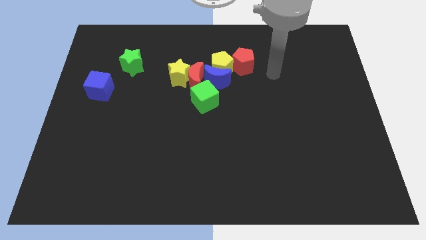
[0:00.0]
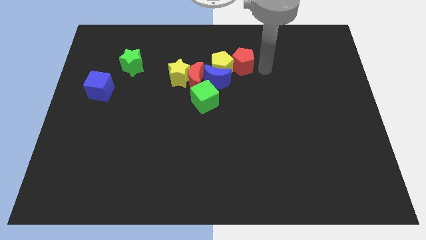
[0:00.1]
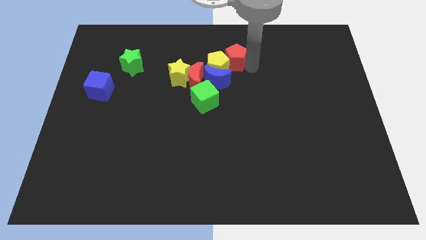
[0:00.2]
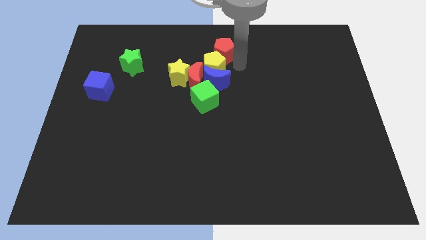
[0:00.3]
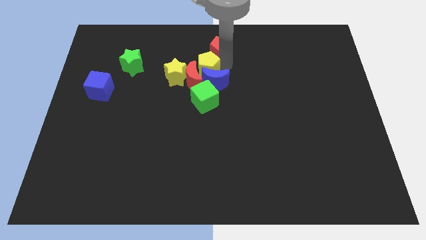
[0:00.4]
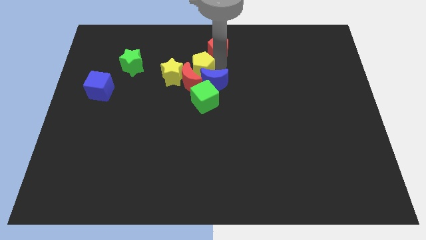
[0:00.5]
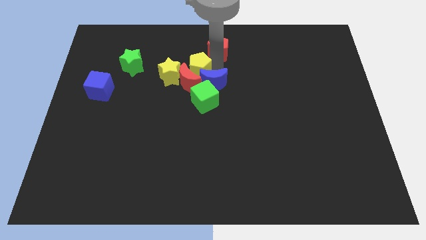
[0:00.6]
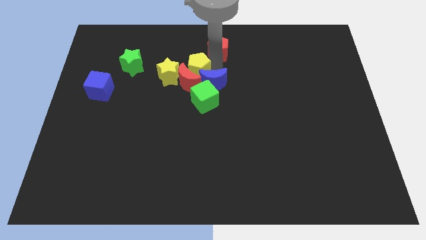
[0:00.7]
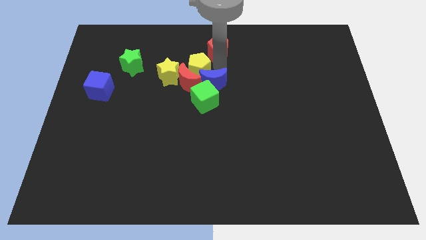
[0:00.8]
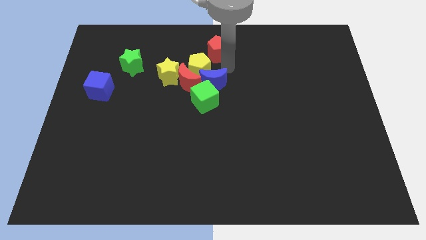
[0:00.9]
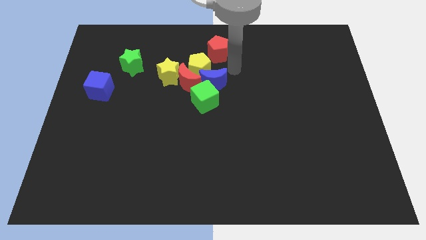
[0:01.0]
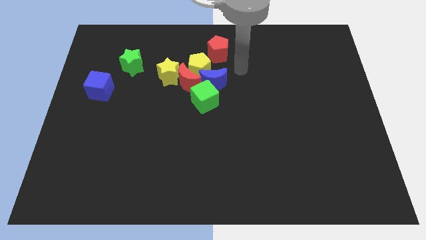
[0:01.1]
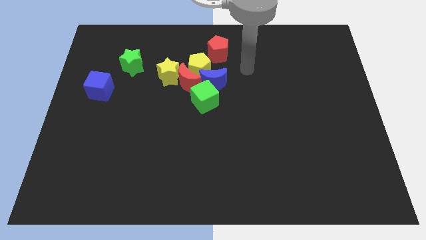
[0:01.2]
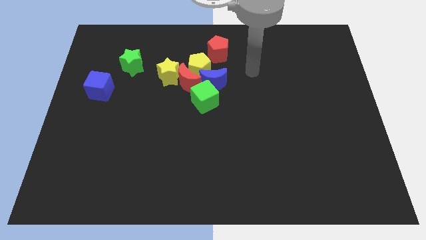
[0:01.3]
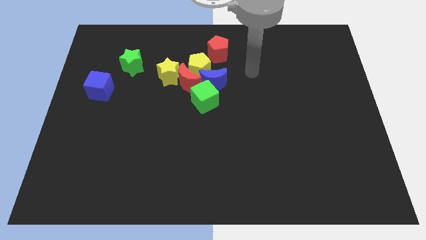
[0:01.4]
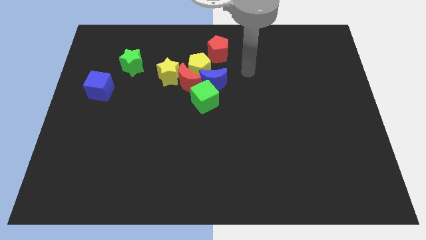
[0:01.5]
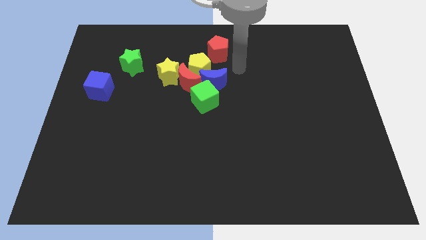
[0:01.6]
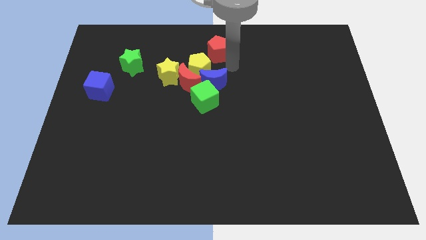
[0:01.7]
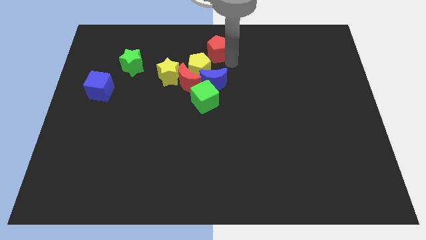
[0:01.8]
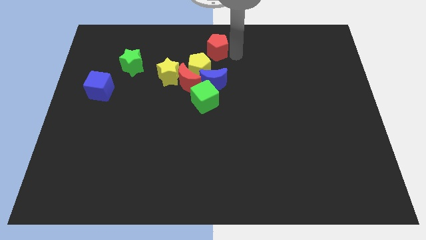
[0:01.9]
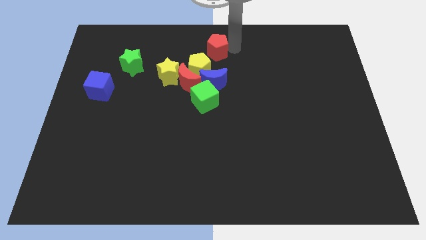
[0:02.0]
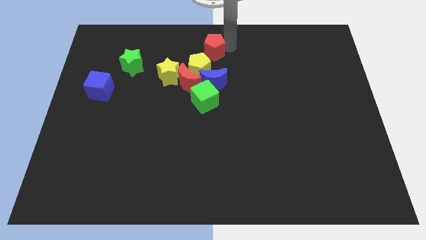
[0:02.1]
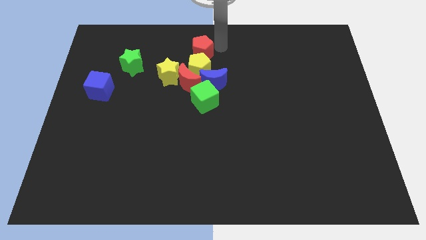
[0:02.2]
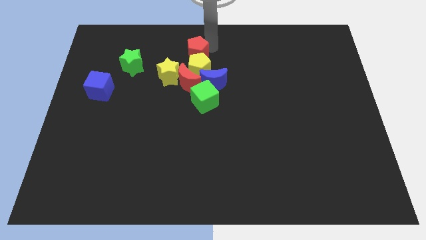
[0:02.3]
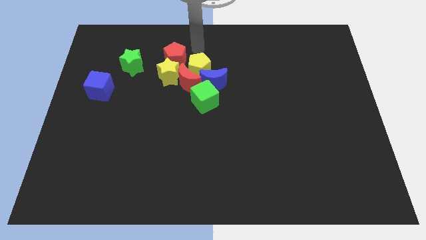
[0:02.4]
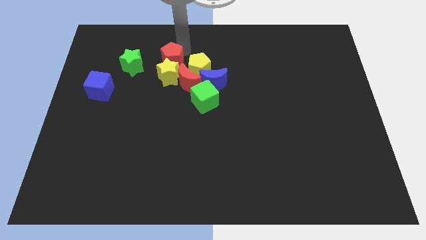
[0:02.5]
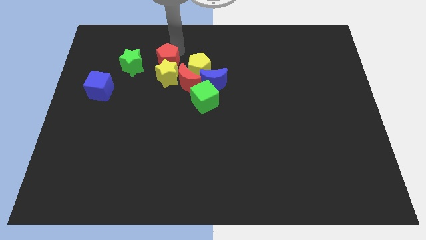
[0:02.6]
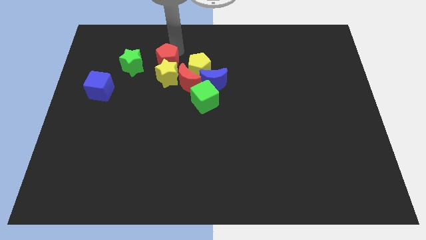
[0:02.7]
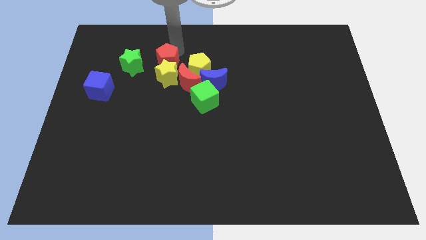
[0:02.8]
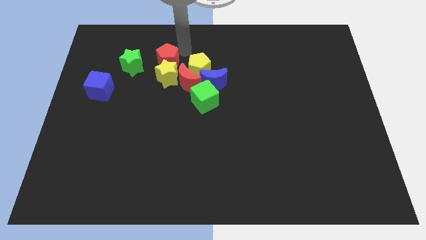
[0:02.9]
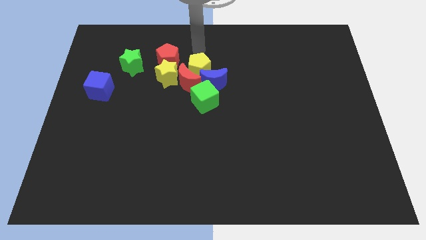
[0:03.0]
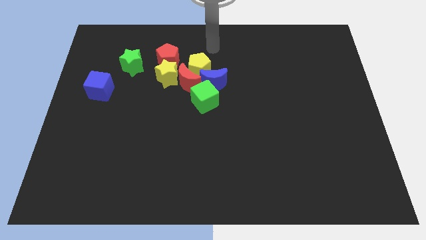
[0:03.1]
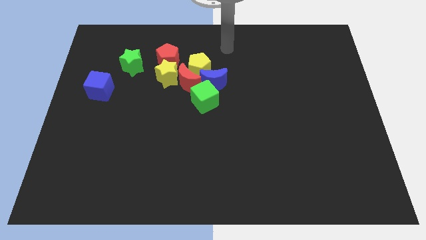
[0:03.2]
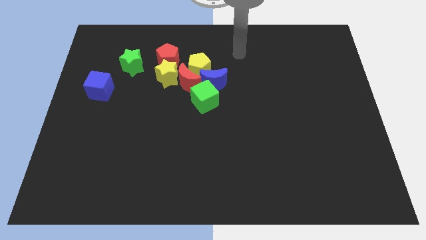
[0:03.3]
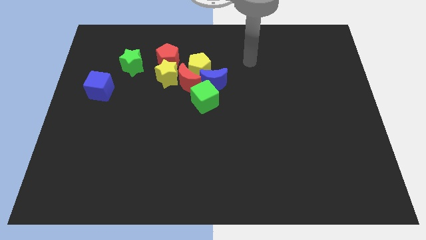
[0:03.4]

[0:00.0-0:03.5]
move the red pentagon above the yellow star

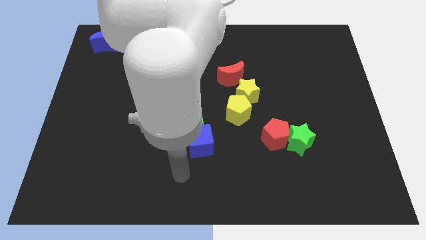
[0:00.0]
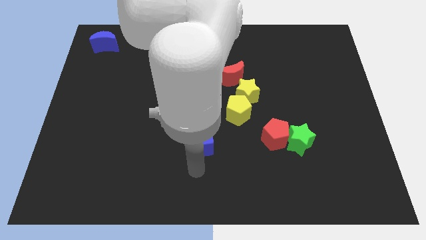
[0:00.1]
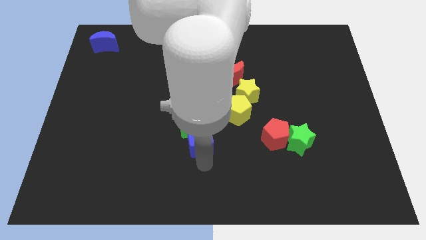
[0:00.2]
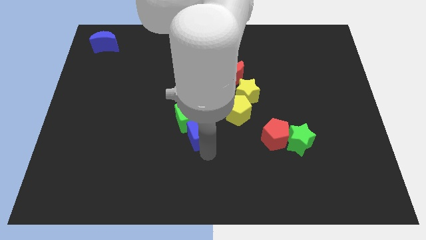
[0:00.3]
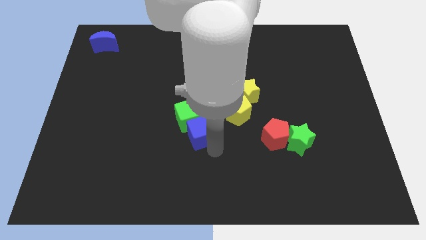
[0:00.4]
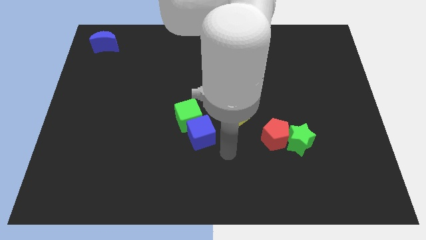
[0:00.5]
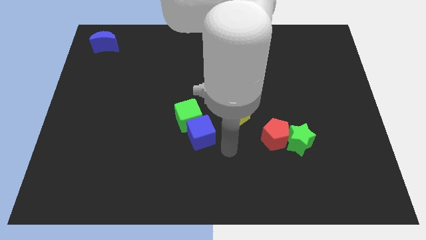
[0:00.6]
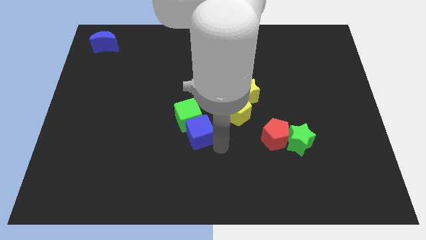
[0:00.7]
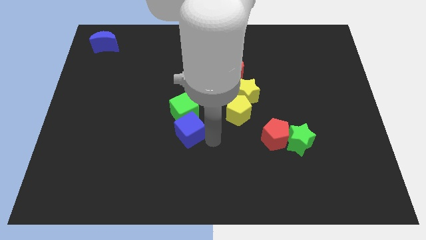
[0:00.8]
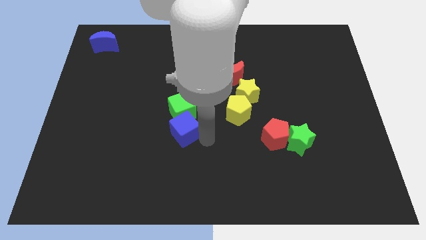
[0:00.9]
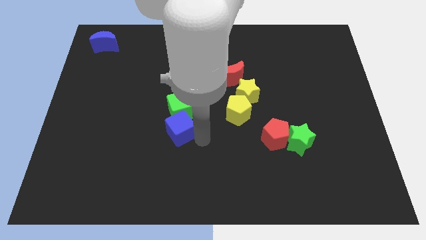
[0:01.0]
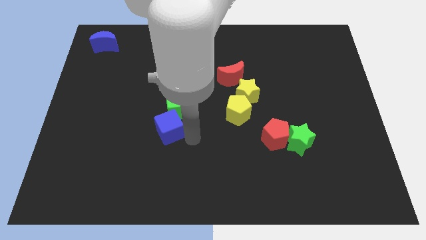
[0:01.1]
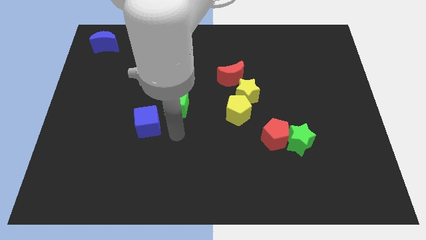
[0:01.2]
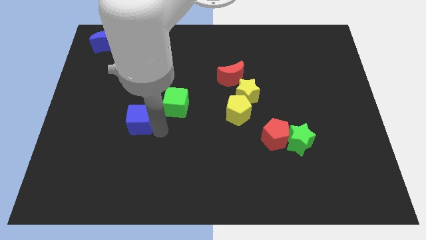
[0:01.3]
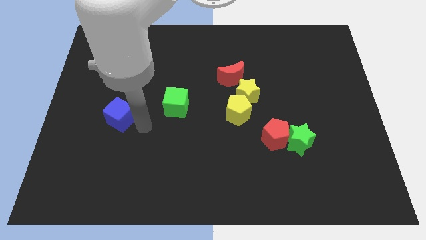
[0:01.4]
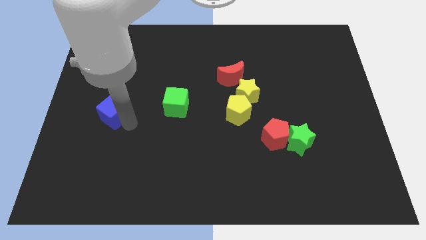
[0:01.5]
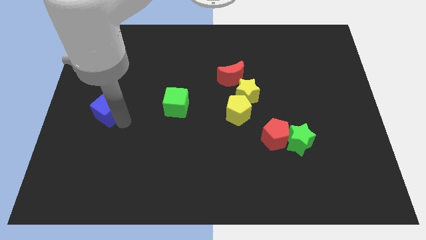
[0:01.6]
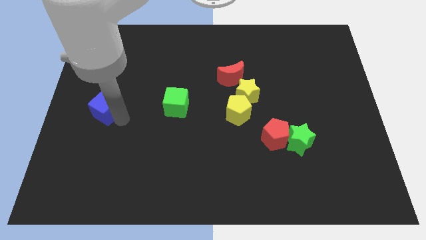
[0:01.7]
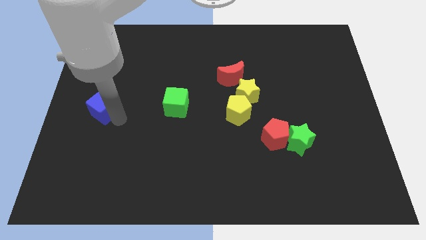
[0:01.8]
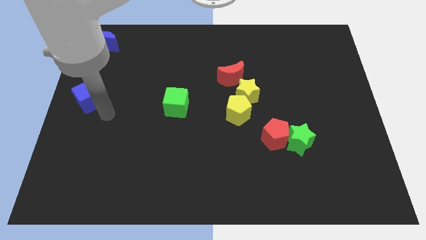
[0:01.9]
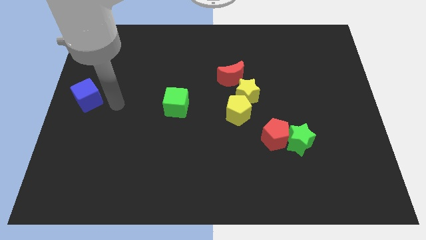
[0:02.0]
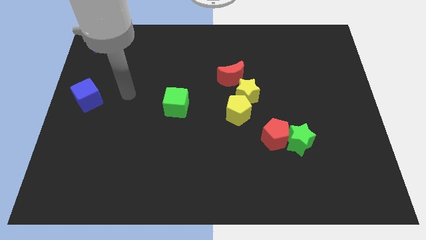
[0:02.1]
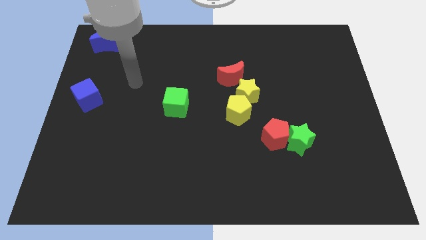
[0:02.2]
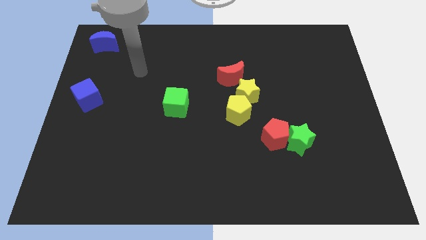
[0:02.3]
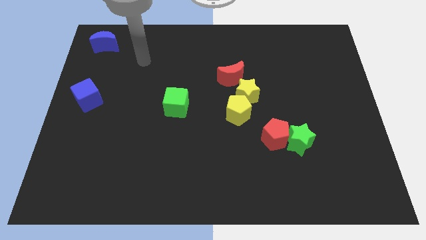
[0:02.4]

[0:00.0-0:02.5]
push the blue cube to the left center of the board

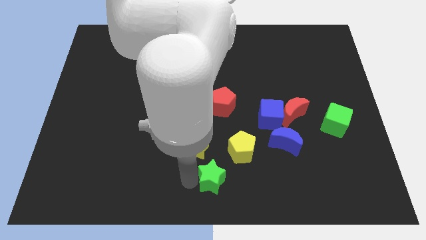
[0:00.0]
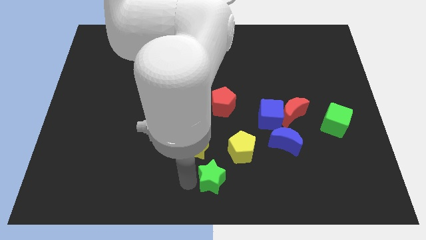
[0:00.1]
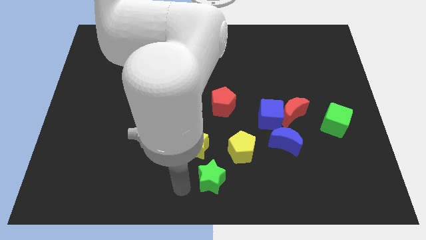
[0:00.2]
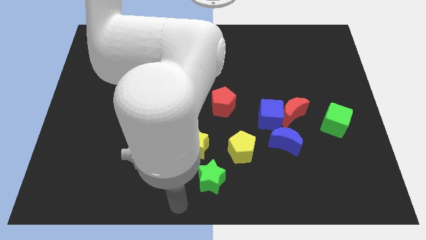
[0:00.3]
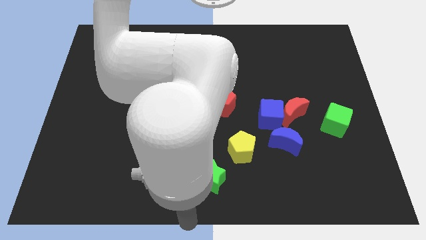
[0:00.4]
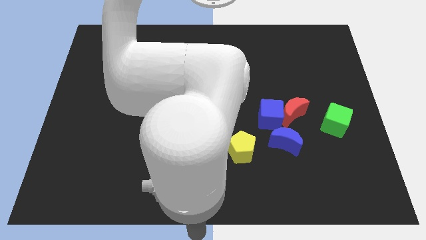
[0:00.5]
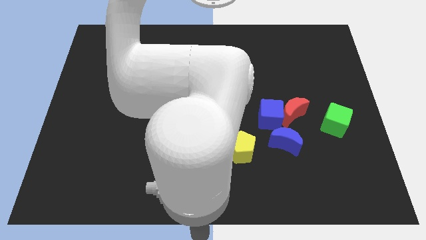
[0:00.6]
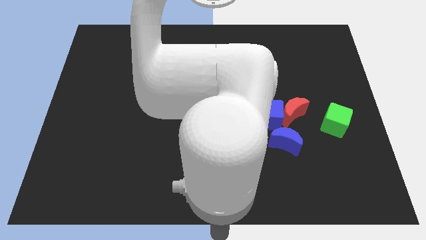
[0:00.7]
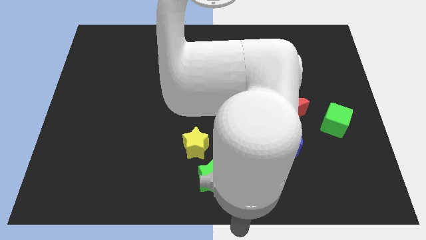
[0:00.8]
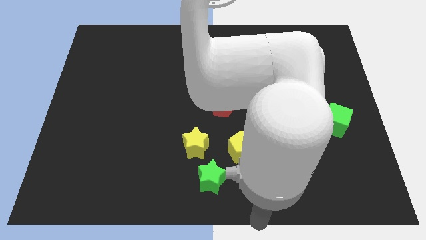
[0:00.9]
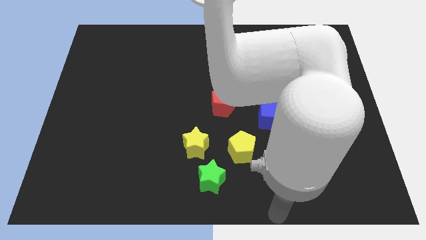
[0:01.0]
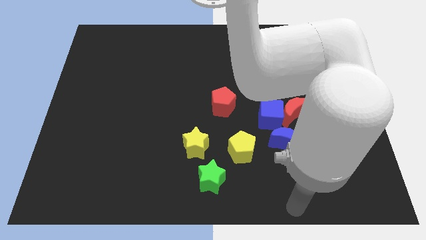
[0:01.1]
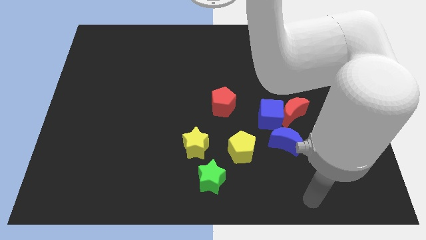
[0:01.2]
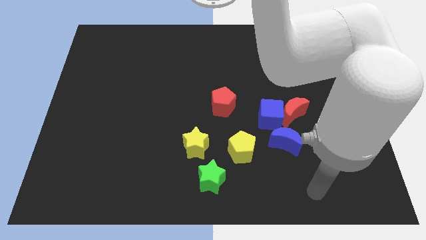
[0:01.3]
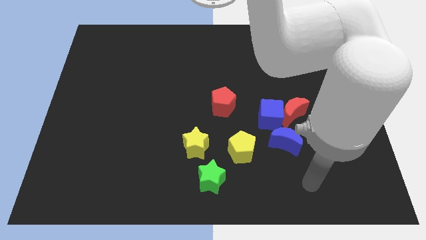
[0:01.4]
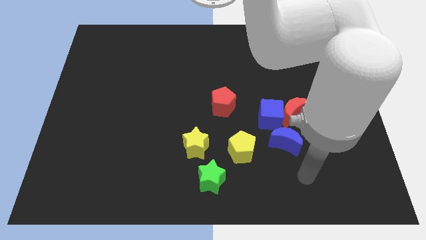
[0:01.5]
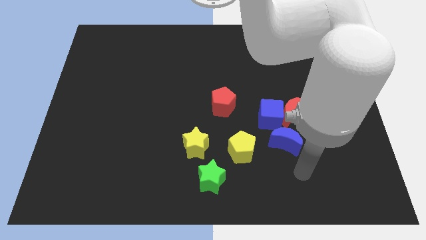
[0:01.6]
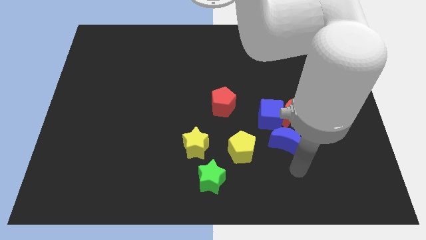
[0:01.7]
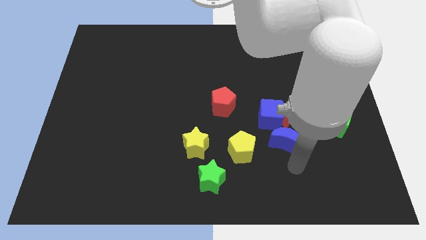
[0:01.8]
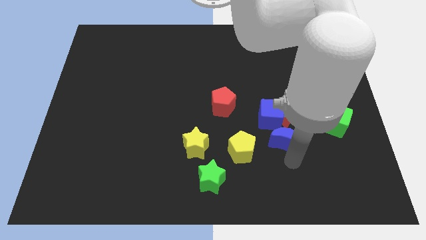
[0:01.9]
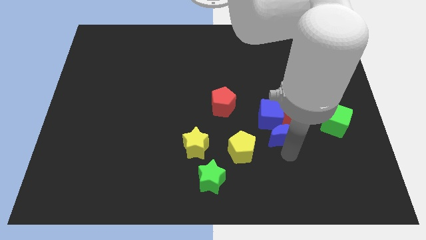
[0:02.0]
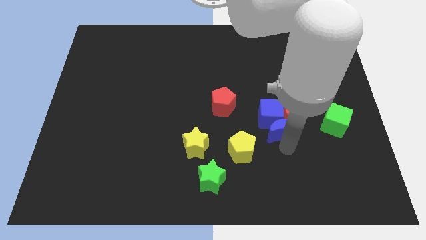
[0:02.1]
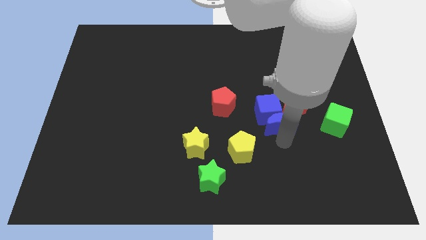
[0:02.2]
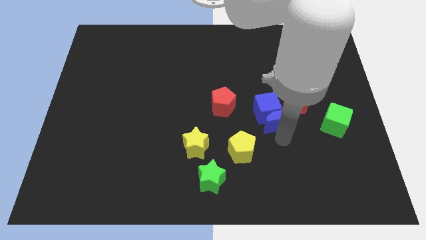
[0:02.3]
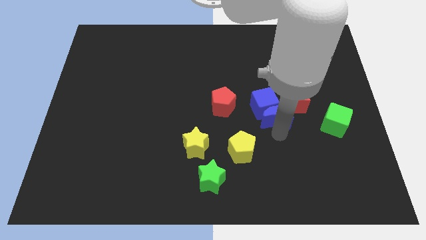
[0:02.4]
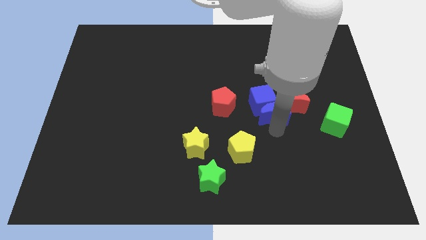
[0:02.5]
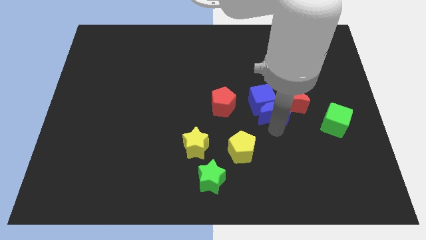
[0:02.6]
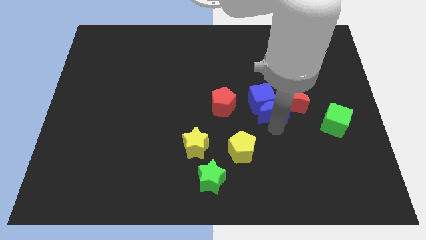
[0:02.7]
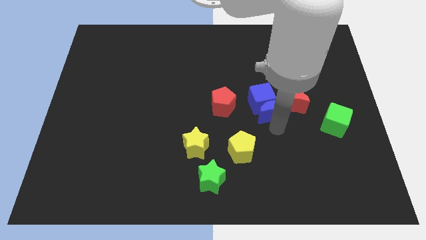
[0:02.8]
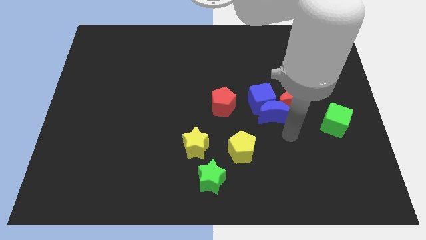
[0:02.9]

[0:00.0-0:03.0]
push the blue blocks towards the top side of the board
